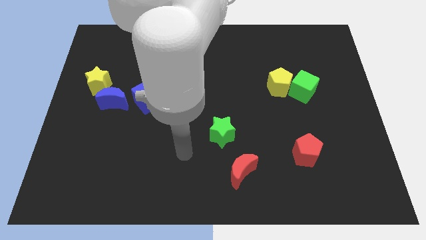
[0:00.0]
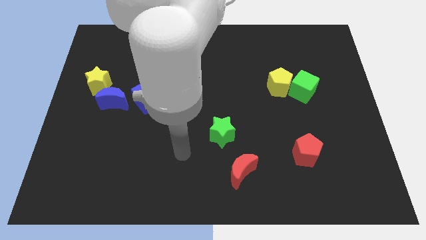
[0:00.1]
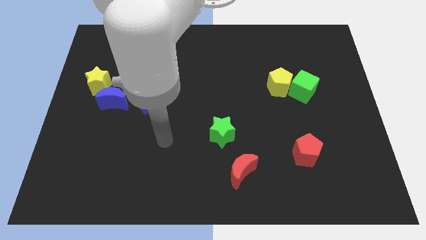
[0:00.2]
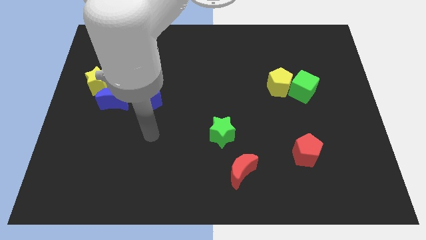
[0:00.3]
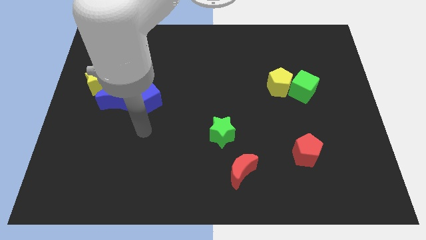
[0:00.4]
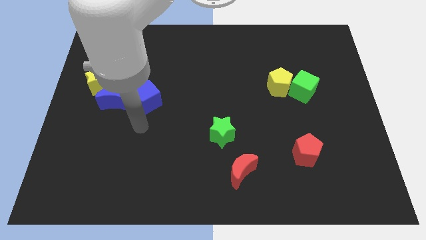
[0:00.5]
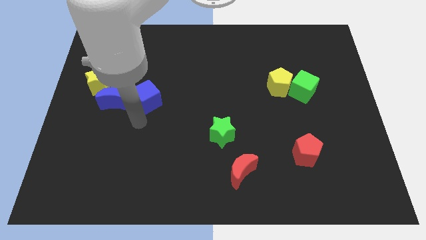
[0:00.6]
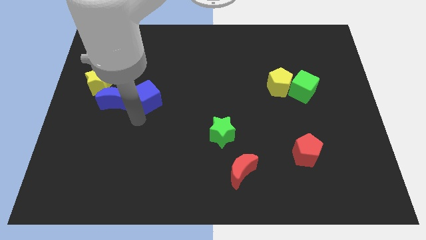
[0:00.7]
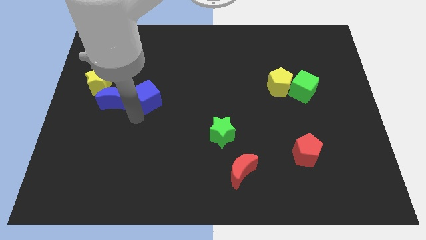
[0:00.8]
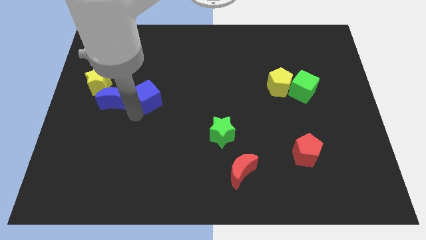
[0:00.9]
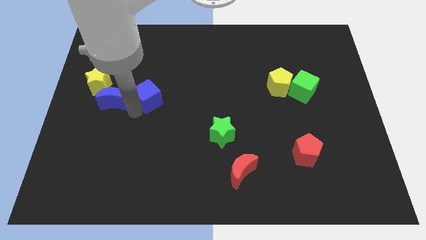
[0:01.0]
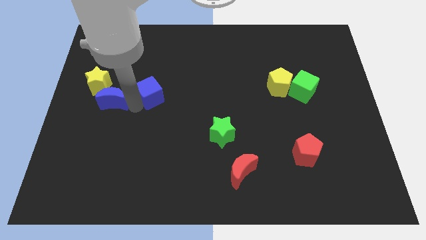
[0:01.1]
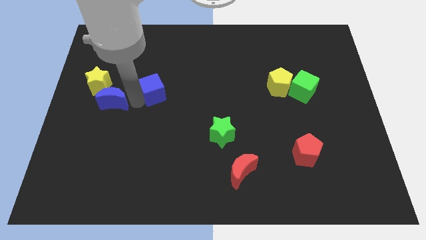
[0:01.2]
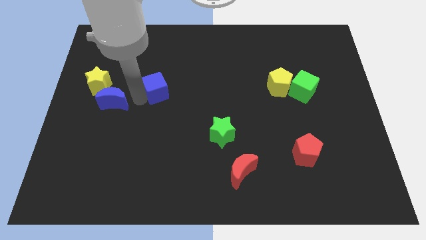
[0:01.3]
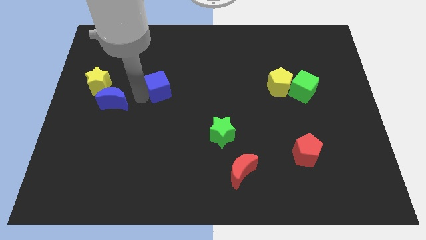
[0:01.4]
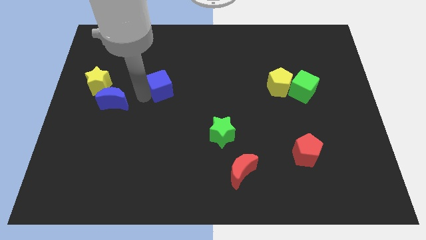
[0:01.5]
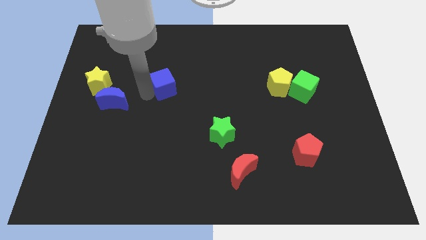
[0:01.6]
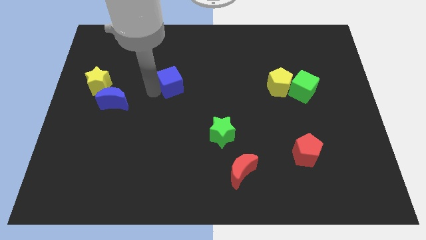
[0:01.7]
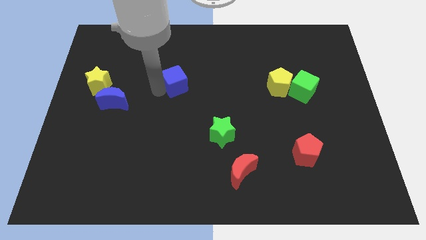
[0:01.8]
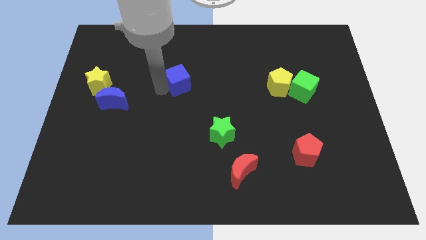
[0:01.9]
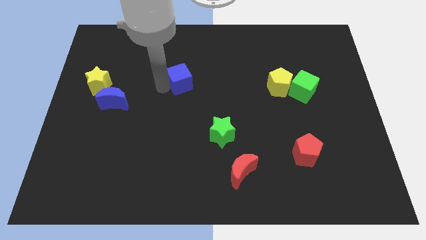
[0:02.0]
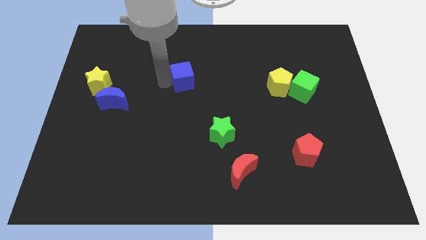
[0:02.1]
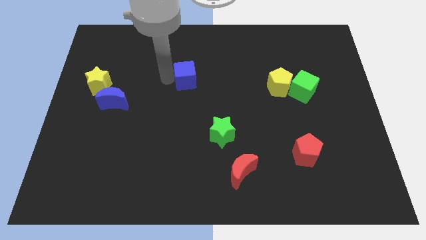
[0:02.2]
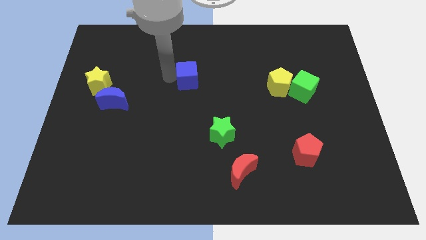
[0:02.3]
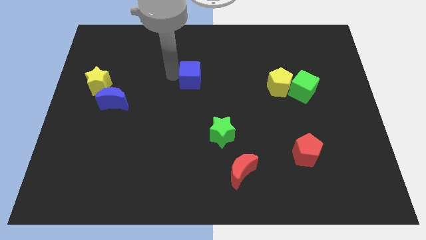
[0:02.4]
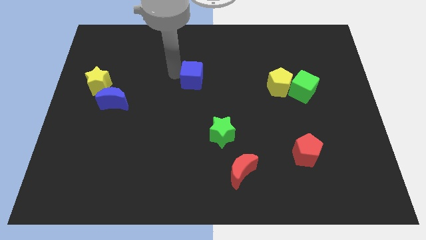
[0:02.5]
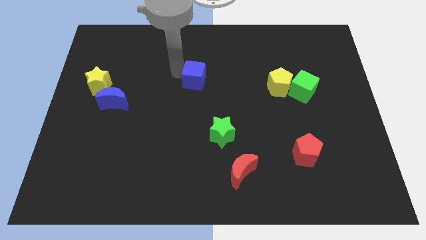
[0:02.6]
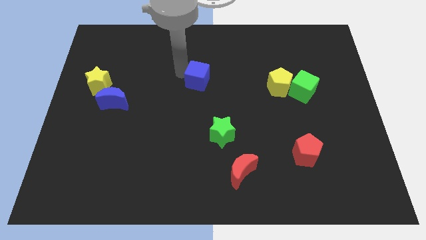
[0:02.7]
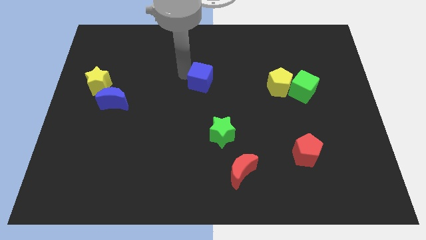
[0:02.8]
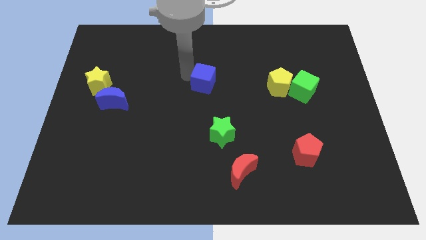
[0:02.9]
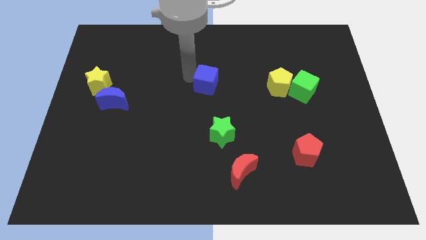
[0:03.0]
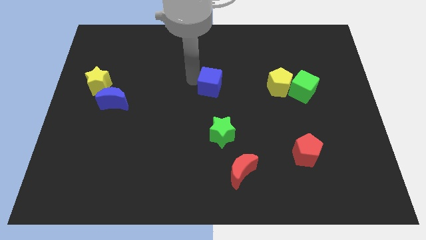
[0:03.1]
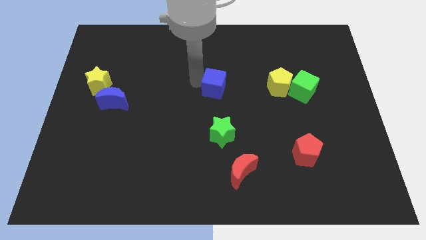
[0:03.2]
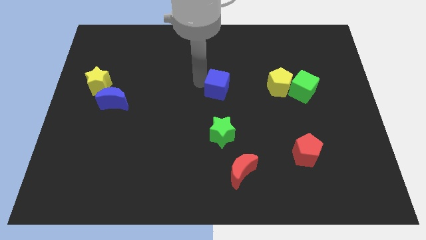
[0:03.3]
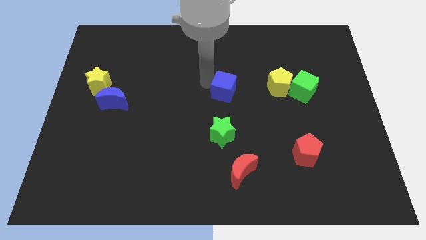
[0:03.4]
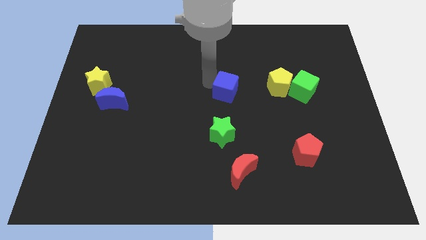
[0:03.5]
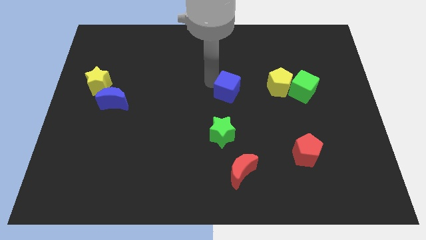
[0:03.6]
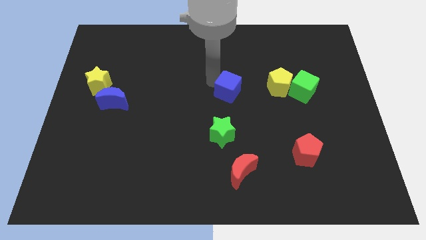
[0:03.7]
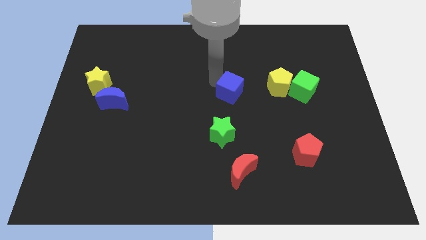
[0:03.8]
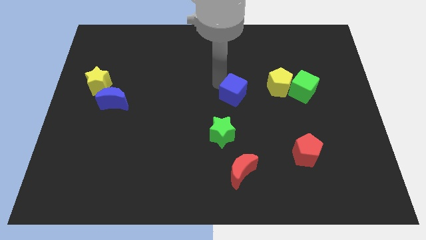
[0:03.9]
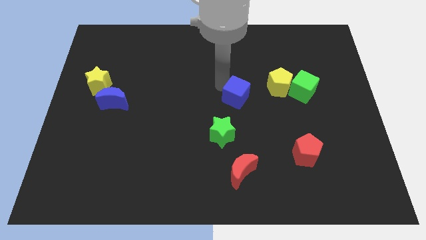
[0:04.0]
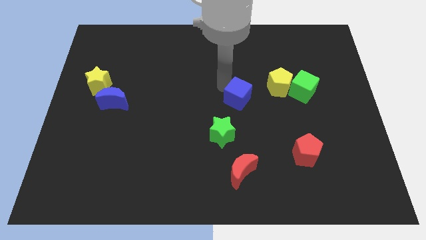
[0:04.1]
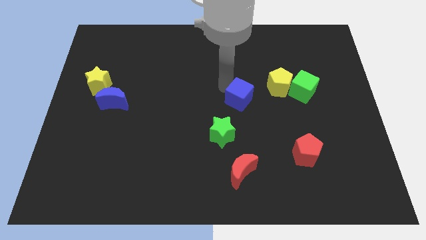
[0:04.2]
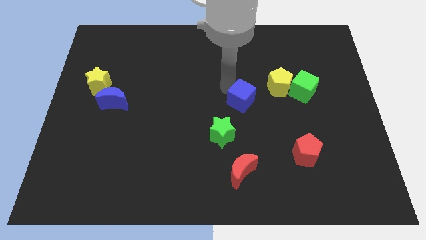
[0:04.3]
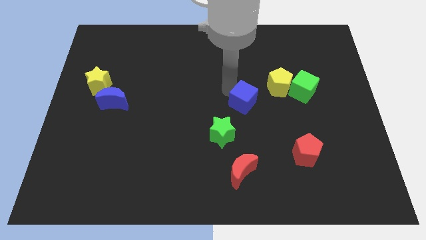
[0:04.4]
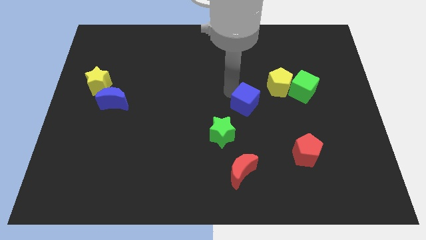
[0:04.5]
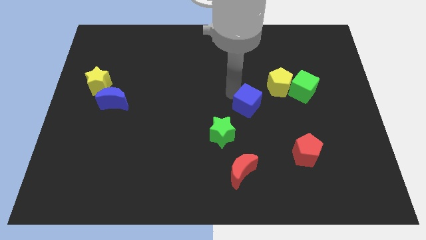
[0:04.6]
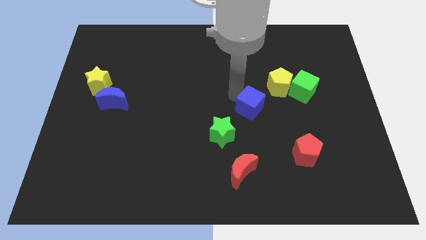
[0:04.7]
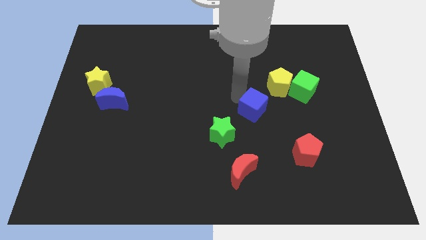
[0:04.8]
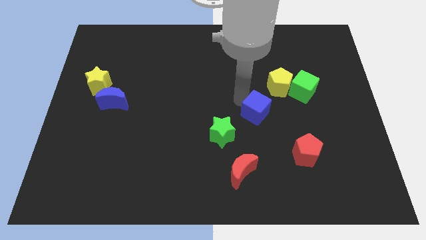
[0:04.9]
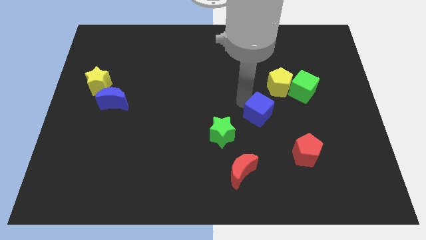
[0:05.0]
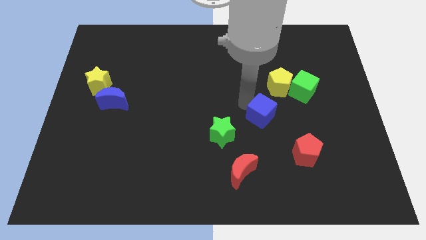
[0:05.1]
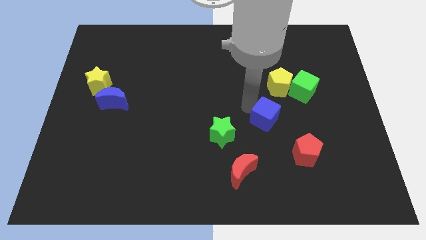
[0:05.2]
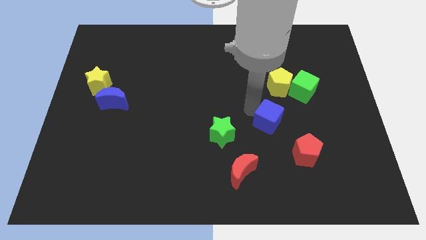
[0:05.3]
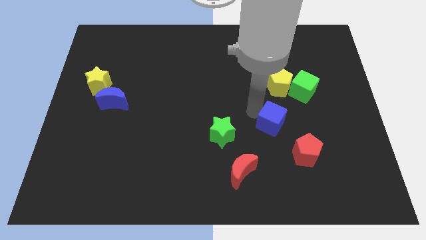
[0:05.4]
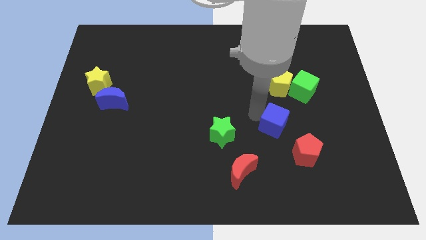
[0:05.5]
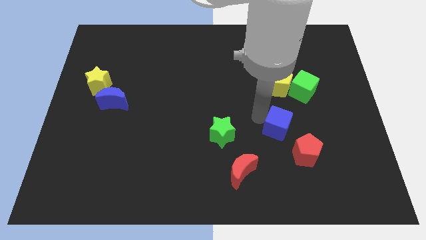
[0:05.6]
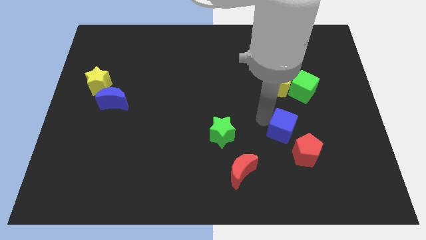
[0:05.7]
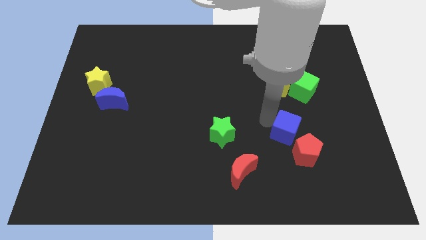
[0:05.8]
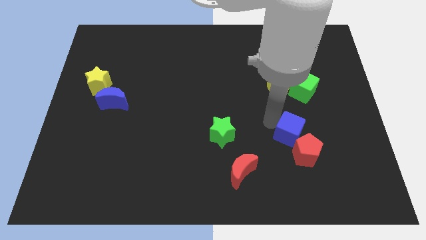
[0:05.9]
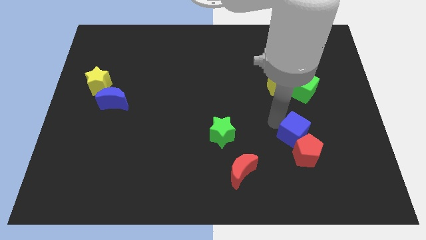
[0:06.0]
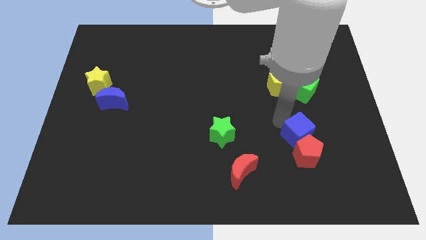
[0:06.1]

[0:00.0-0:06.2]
put the blue cube close to the red pentagon

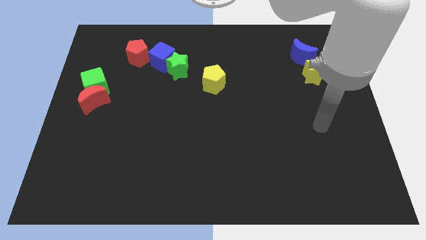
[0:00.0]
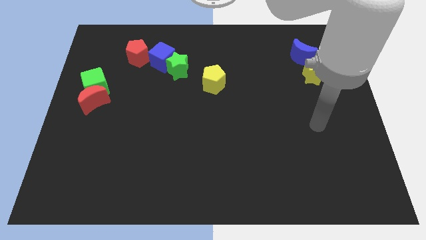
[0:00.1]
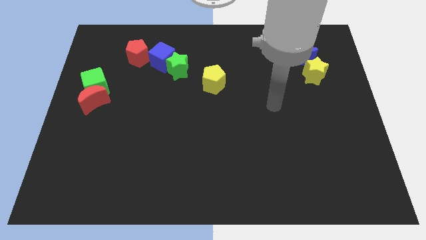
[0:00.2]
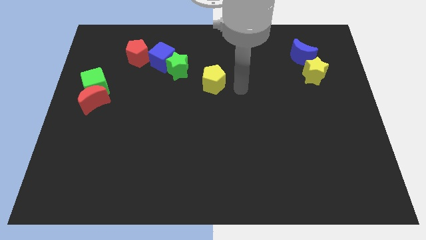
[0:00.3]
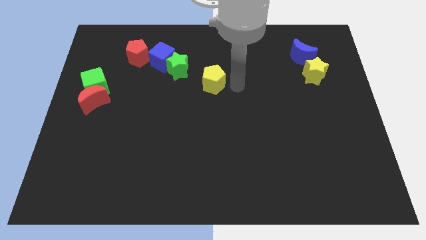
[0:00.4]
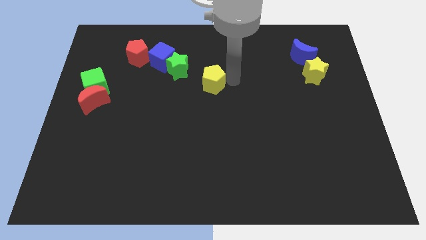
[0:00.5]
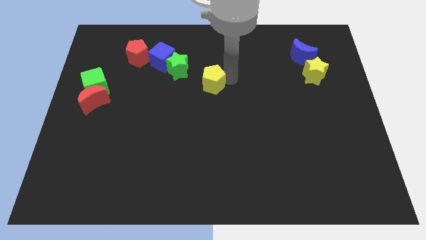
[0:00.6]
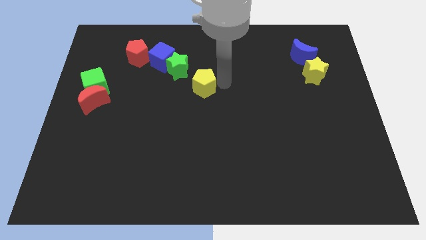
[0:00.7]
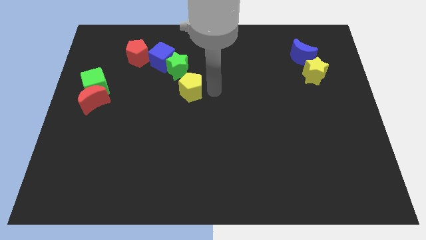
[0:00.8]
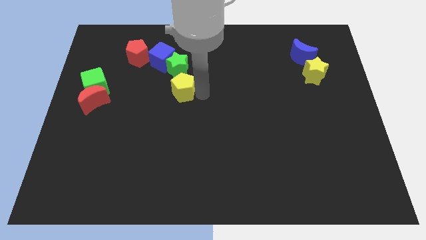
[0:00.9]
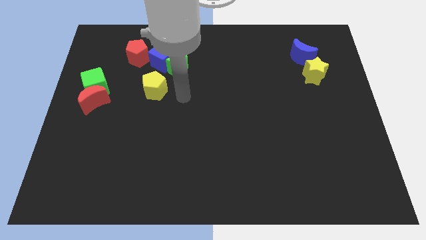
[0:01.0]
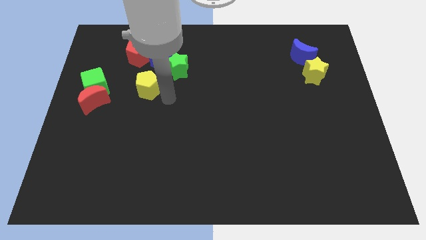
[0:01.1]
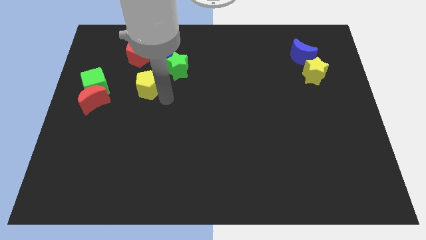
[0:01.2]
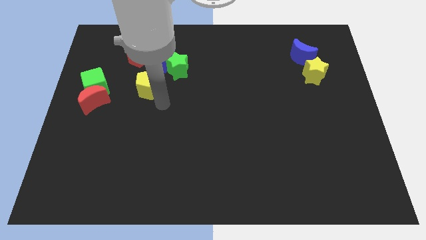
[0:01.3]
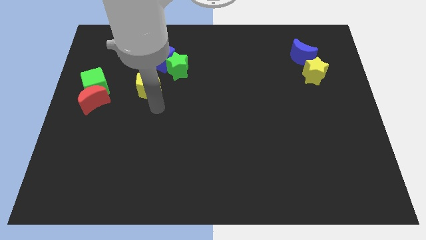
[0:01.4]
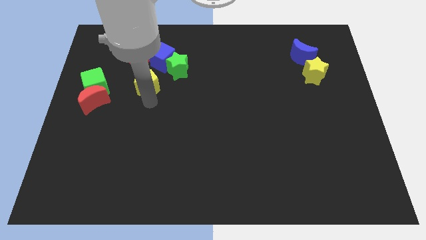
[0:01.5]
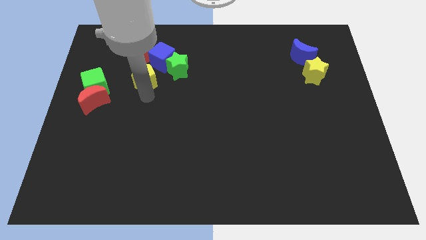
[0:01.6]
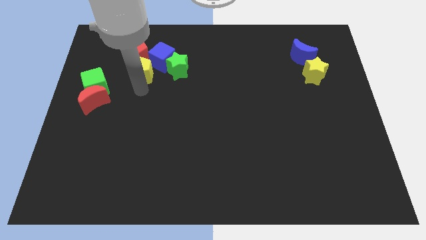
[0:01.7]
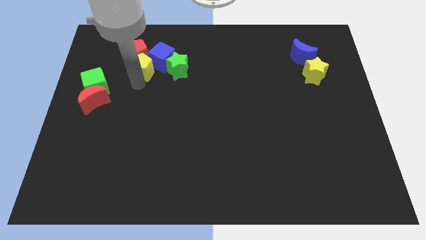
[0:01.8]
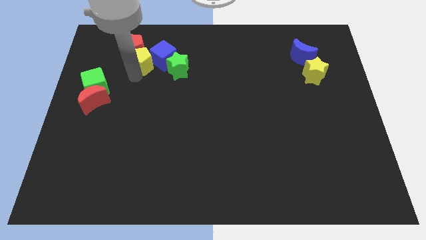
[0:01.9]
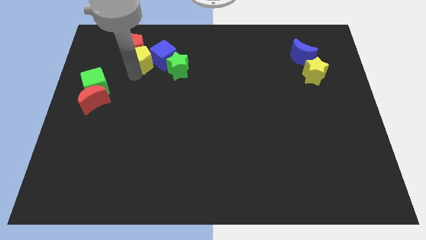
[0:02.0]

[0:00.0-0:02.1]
move the yellow pentagon close to the red pentagon
